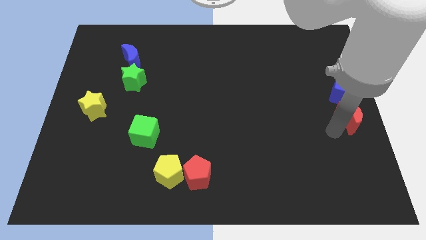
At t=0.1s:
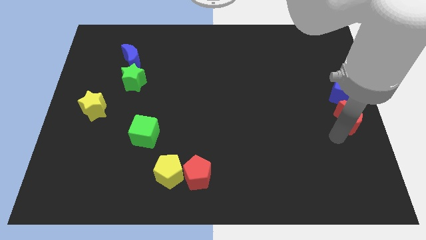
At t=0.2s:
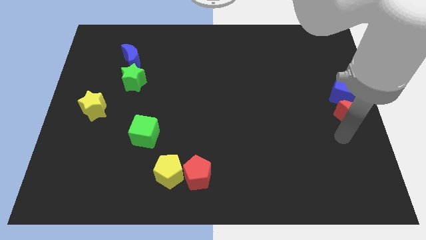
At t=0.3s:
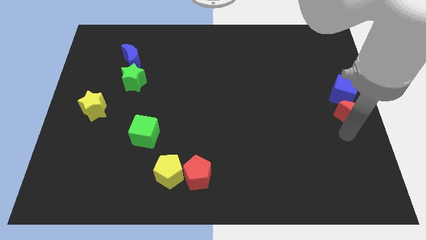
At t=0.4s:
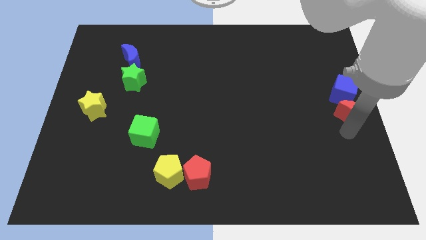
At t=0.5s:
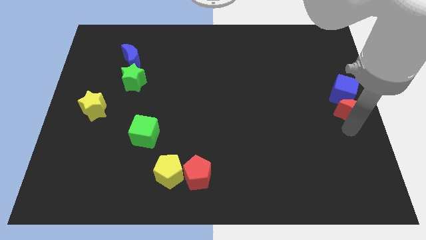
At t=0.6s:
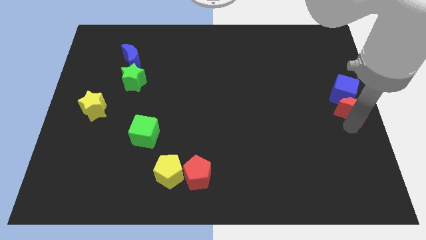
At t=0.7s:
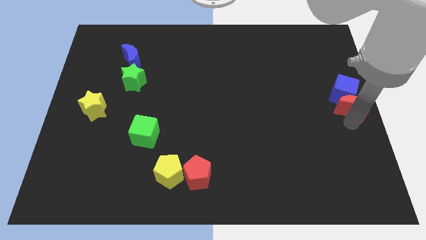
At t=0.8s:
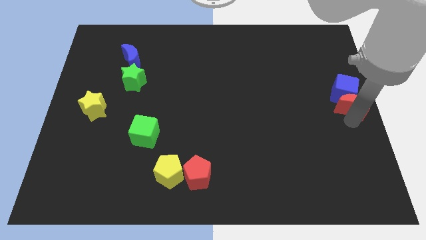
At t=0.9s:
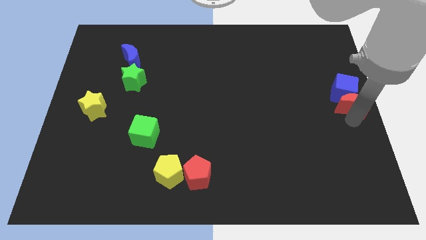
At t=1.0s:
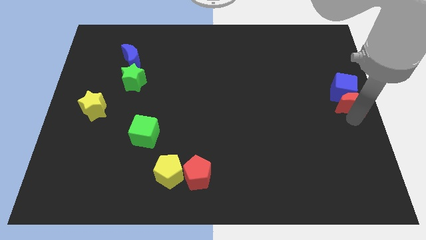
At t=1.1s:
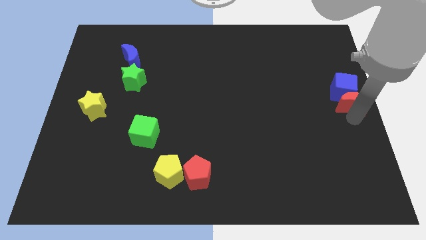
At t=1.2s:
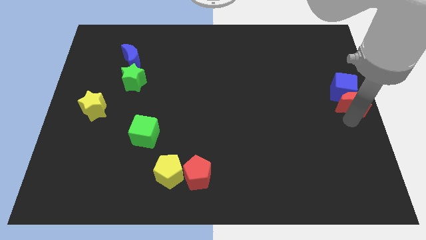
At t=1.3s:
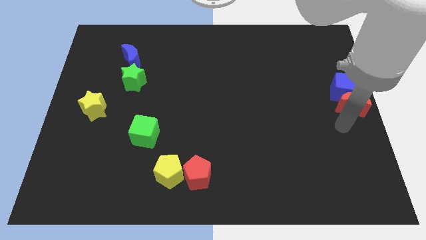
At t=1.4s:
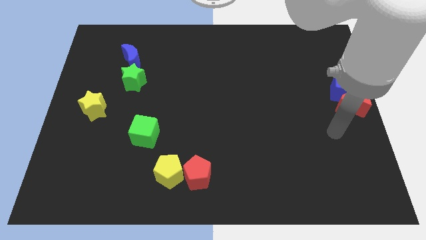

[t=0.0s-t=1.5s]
push red moon into the blue cube

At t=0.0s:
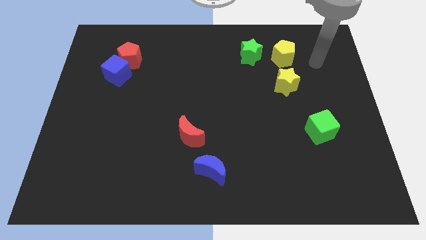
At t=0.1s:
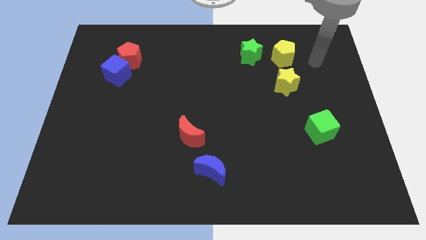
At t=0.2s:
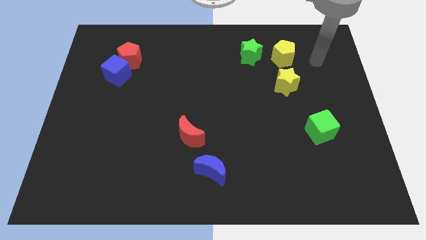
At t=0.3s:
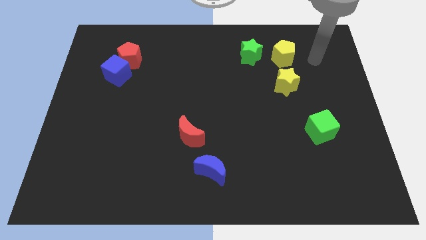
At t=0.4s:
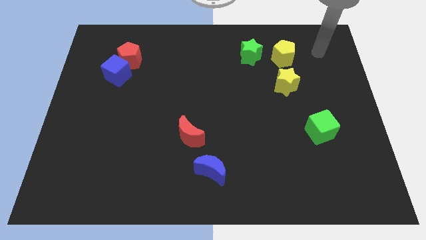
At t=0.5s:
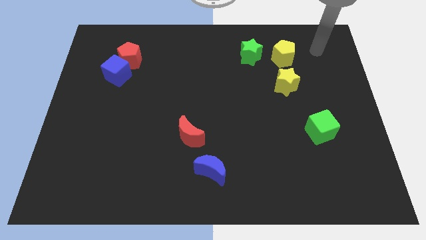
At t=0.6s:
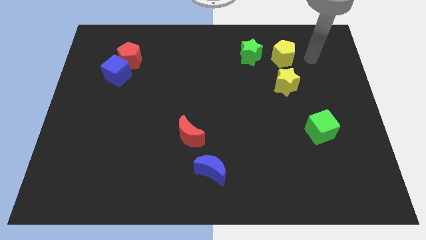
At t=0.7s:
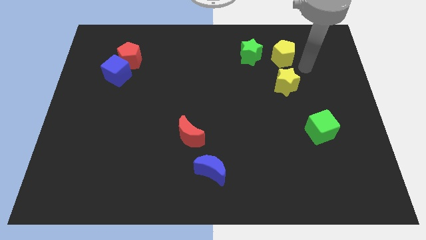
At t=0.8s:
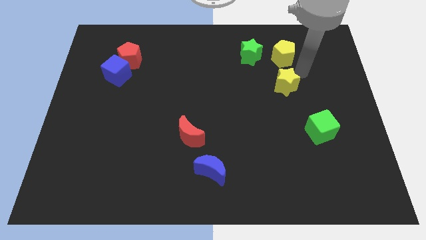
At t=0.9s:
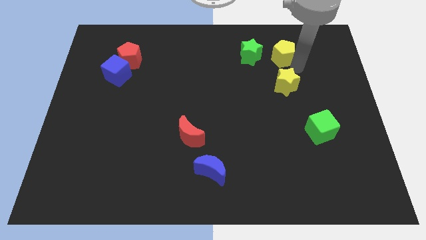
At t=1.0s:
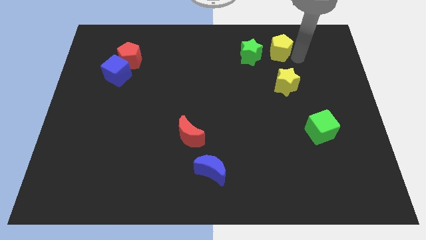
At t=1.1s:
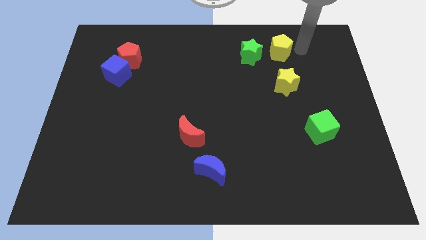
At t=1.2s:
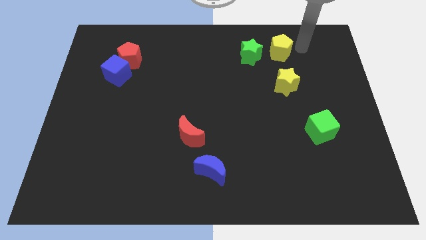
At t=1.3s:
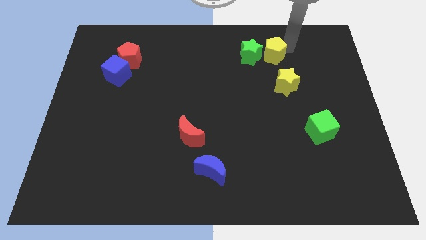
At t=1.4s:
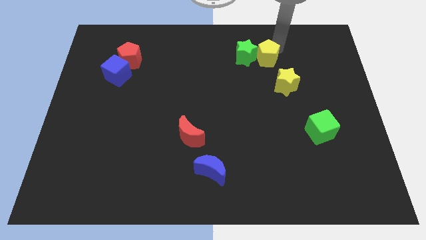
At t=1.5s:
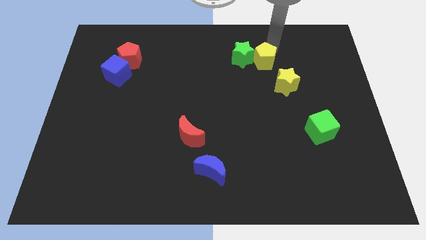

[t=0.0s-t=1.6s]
put the yellow pentagon into the green star

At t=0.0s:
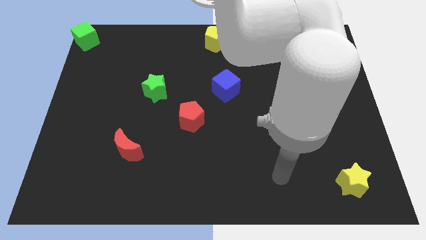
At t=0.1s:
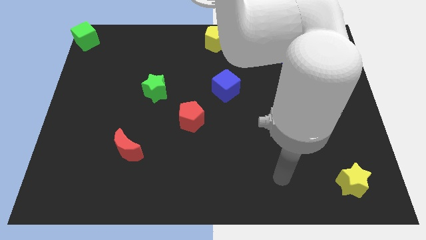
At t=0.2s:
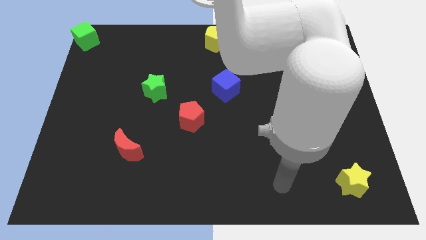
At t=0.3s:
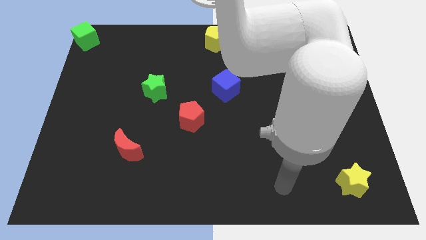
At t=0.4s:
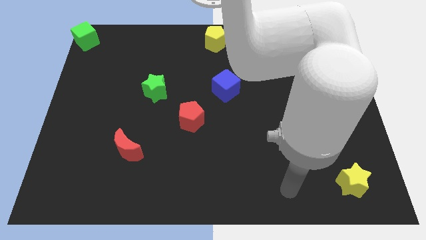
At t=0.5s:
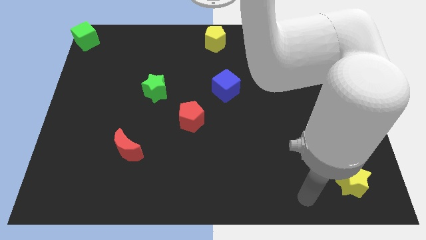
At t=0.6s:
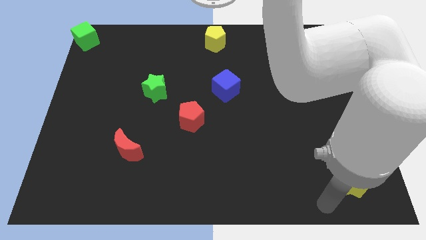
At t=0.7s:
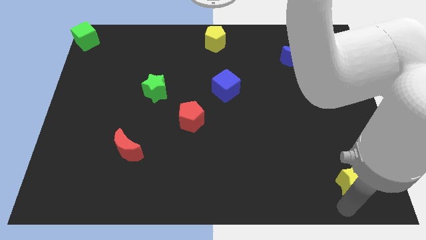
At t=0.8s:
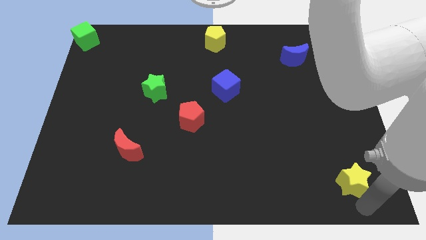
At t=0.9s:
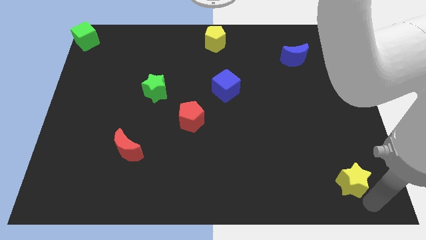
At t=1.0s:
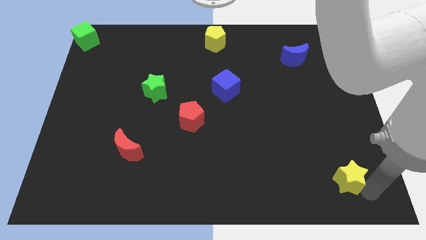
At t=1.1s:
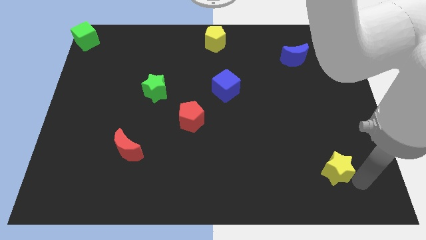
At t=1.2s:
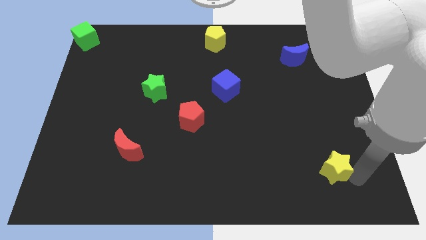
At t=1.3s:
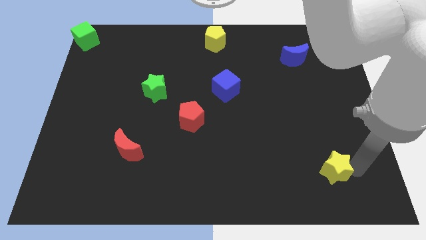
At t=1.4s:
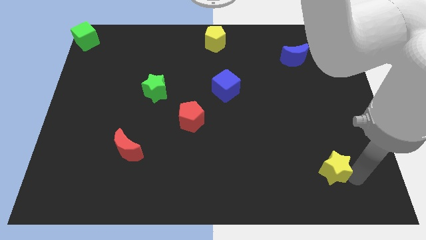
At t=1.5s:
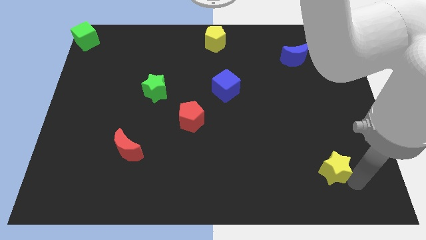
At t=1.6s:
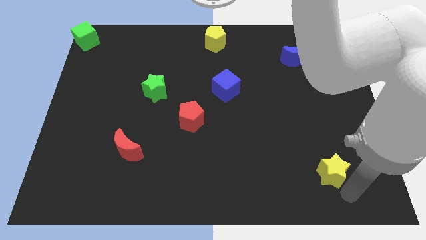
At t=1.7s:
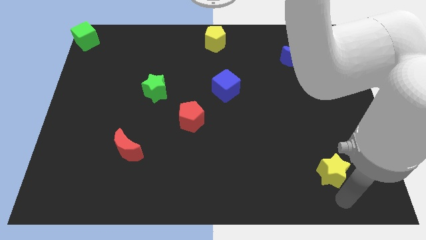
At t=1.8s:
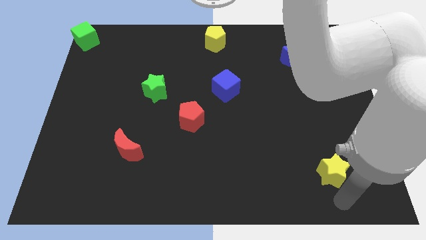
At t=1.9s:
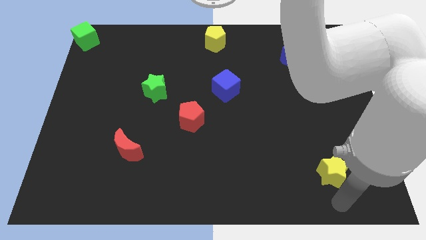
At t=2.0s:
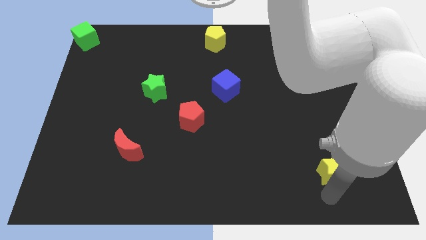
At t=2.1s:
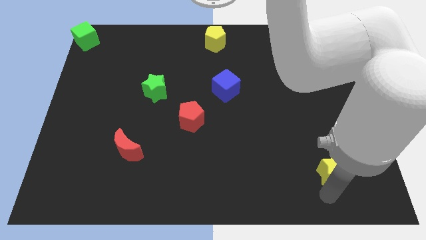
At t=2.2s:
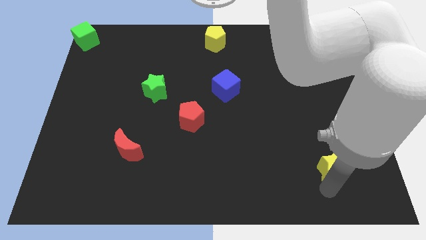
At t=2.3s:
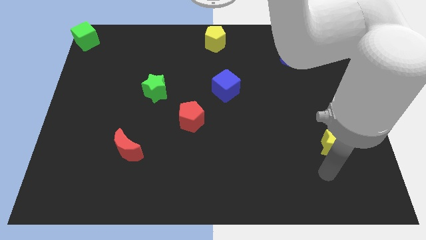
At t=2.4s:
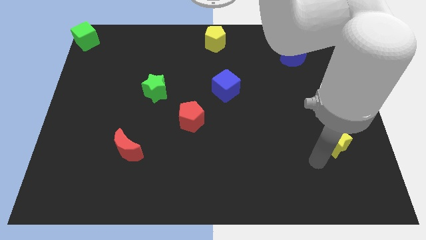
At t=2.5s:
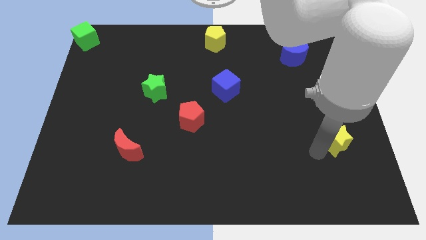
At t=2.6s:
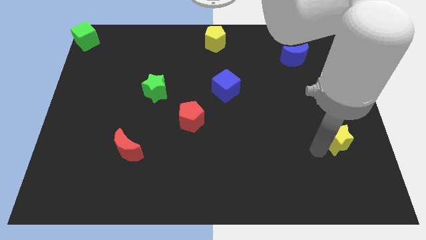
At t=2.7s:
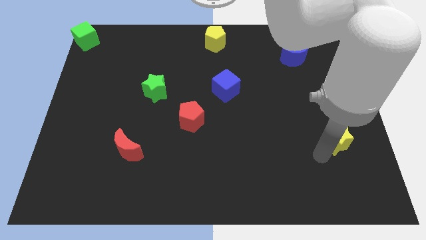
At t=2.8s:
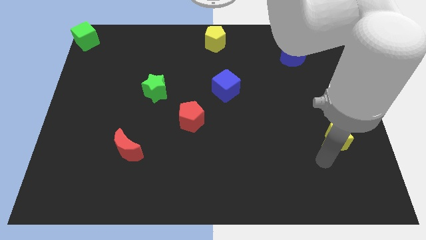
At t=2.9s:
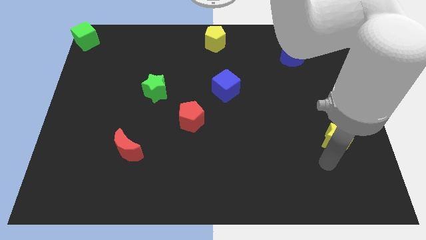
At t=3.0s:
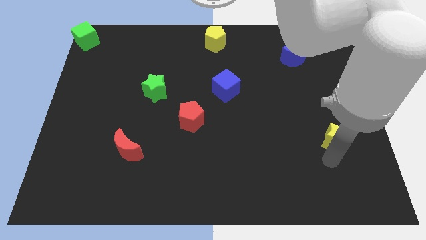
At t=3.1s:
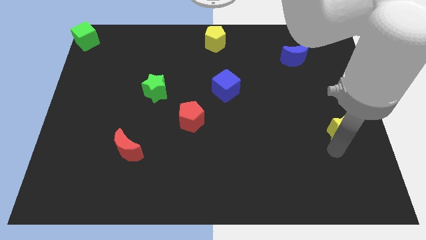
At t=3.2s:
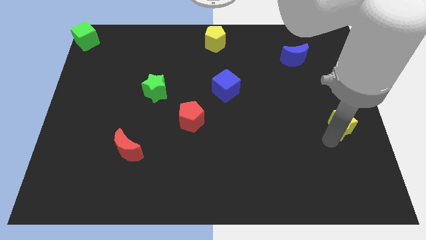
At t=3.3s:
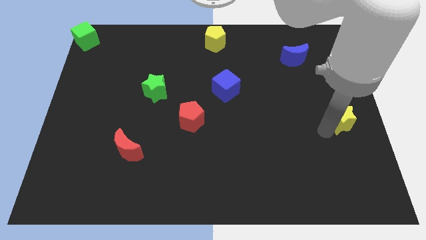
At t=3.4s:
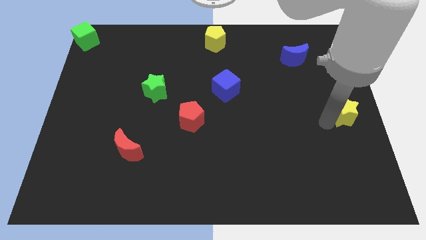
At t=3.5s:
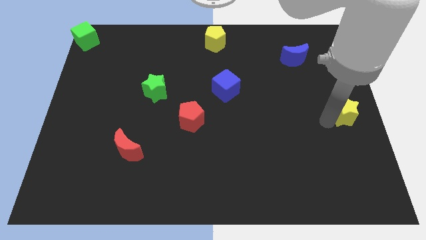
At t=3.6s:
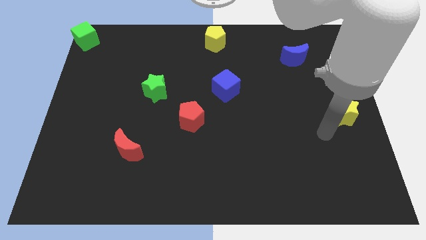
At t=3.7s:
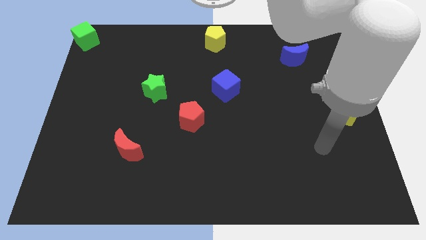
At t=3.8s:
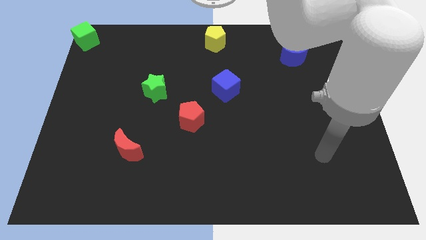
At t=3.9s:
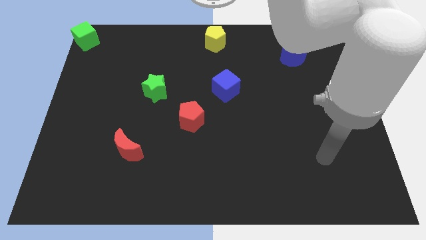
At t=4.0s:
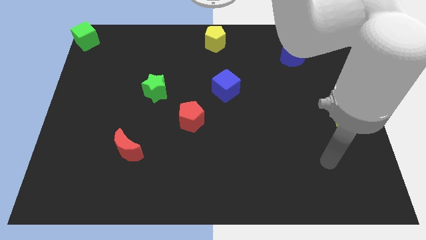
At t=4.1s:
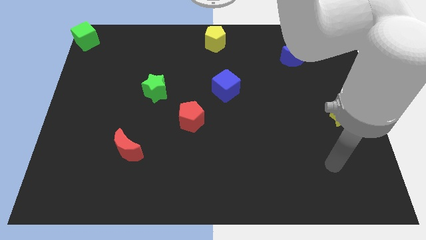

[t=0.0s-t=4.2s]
move the yellow star to the right center of the board

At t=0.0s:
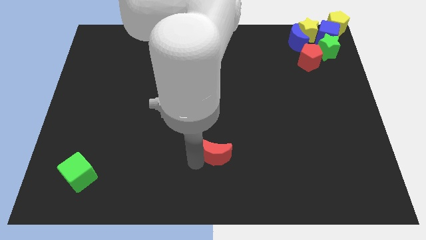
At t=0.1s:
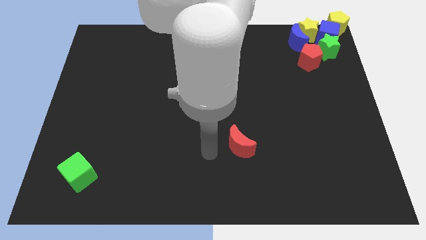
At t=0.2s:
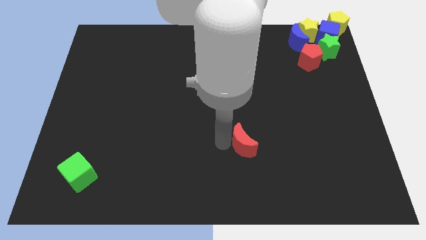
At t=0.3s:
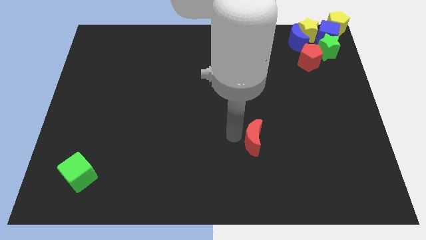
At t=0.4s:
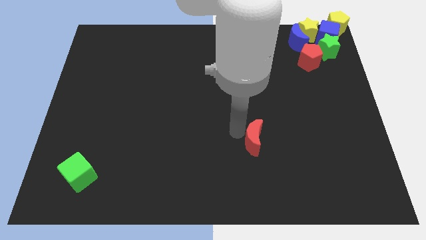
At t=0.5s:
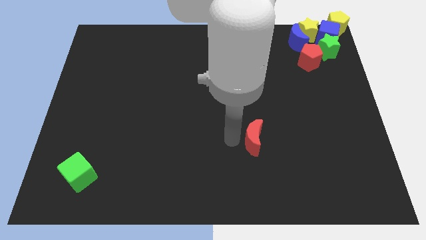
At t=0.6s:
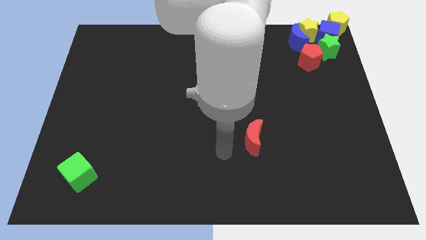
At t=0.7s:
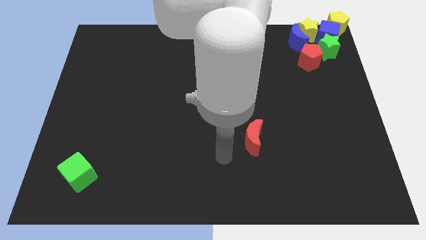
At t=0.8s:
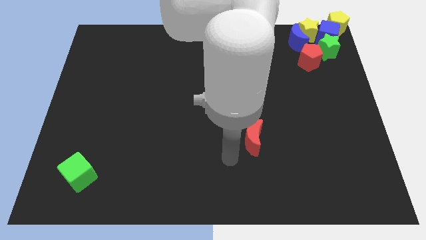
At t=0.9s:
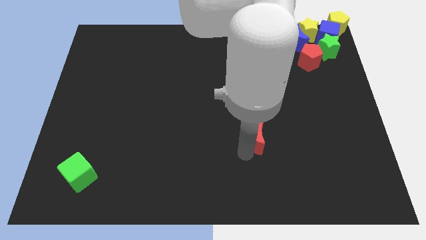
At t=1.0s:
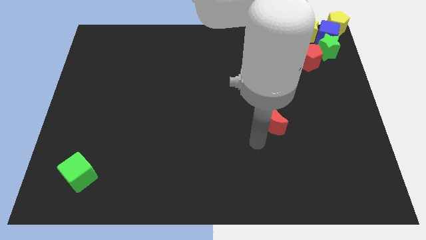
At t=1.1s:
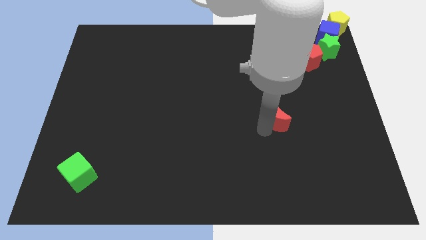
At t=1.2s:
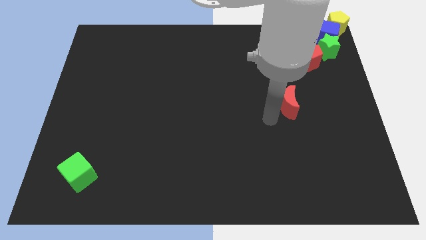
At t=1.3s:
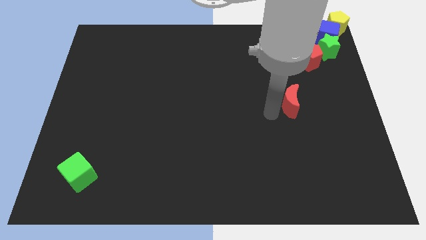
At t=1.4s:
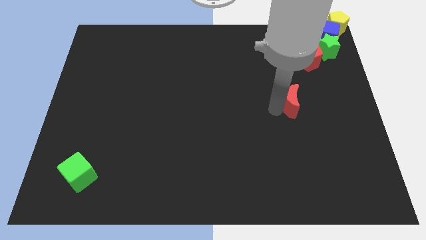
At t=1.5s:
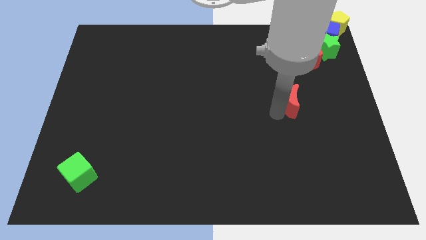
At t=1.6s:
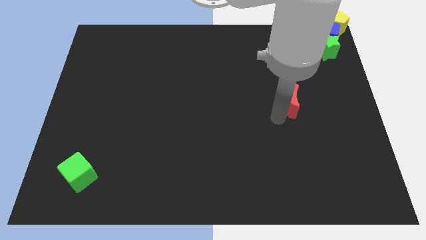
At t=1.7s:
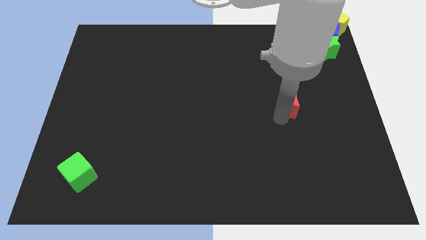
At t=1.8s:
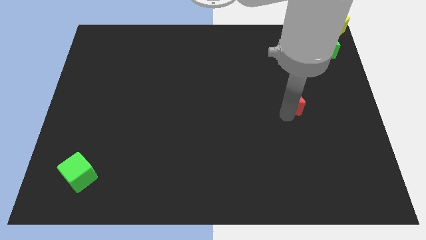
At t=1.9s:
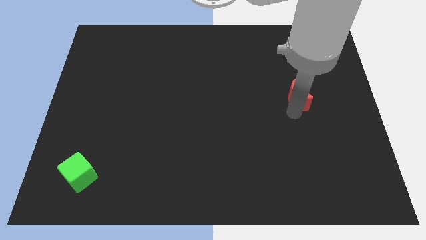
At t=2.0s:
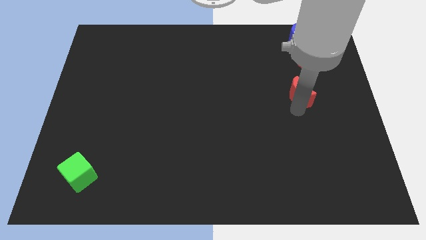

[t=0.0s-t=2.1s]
push the red moon towards the red pentagon
